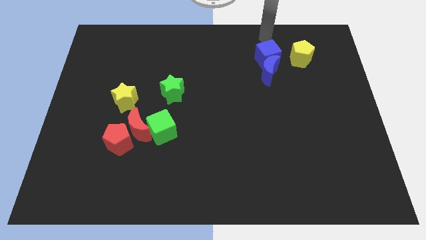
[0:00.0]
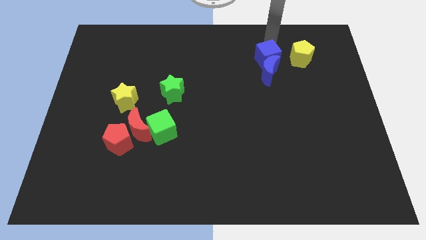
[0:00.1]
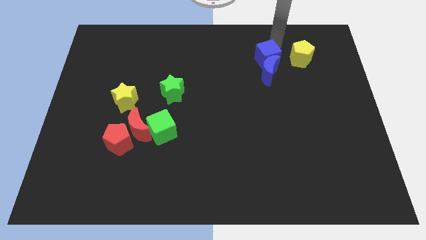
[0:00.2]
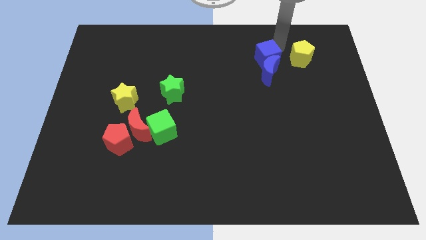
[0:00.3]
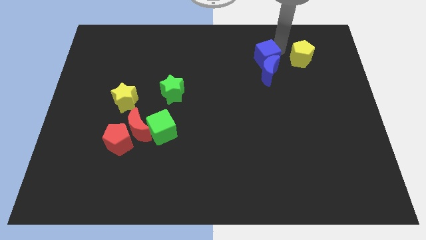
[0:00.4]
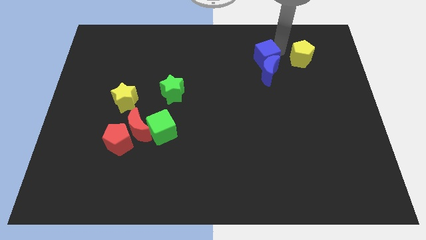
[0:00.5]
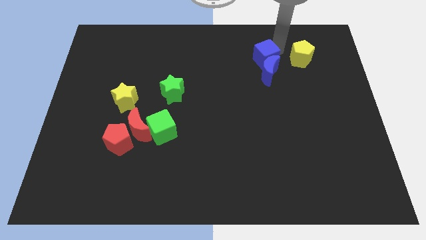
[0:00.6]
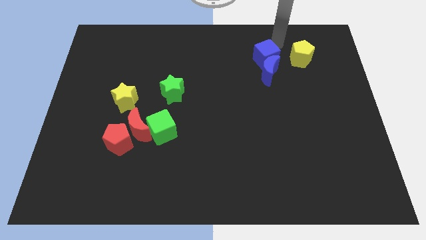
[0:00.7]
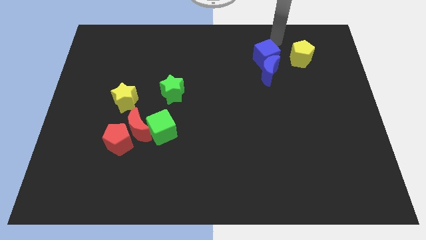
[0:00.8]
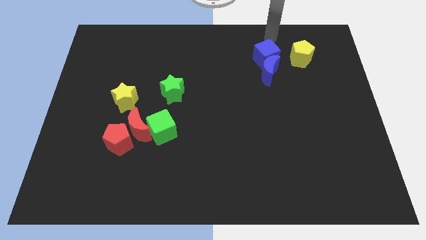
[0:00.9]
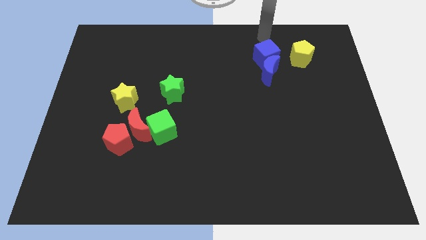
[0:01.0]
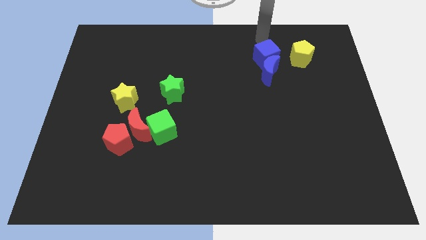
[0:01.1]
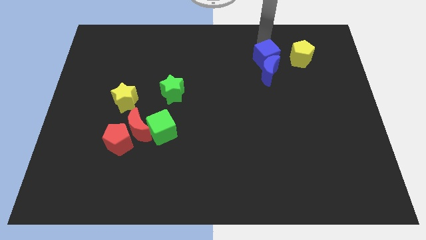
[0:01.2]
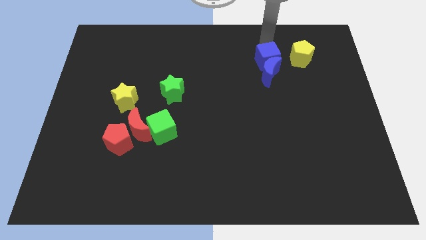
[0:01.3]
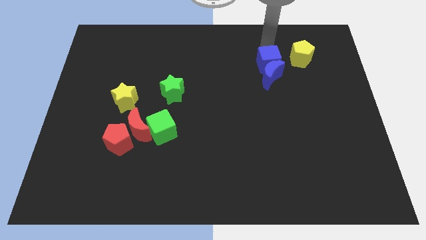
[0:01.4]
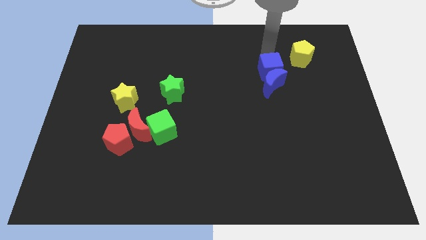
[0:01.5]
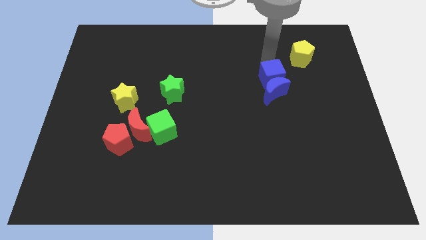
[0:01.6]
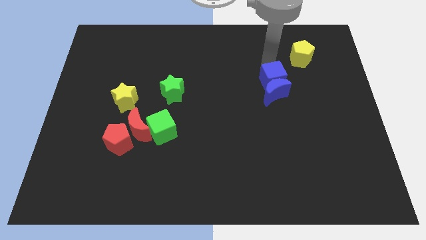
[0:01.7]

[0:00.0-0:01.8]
move the blue blocks away from the yellow pentagon

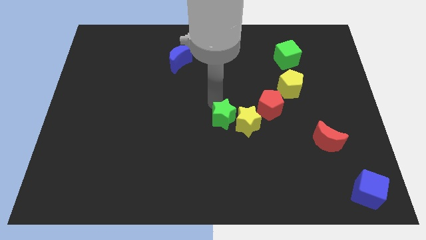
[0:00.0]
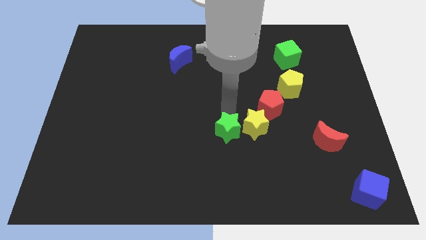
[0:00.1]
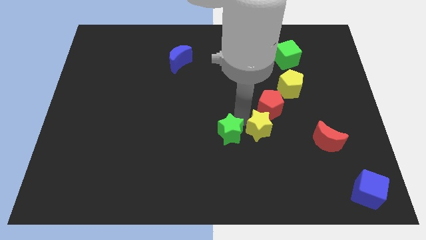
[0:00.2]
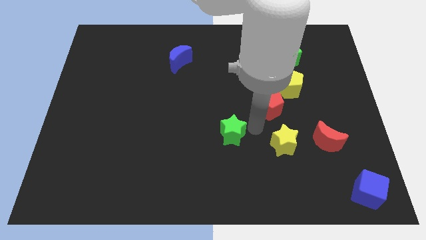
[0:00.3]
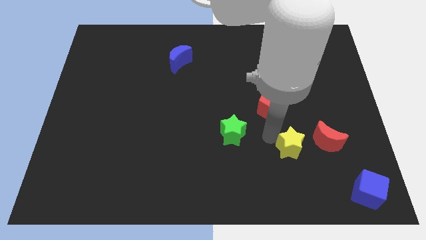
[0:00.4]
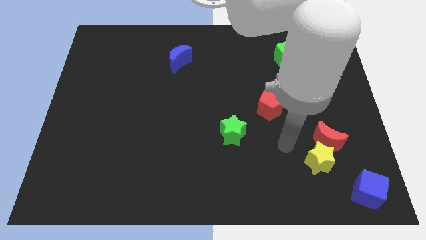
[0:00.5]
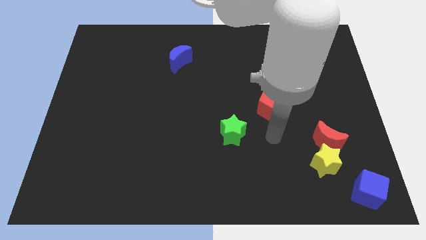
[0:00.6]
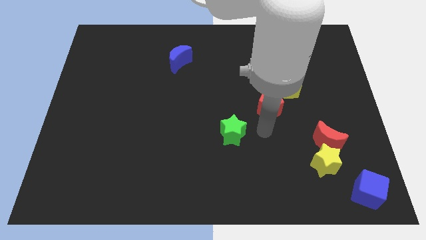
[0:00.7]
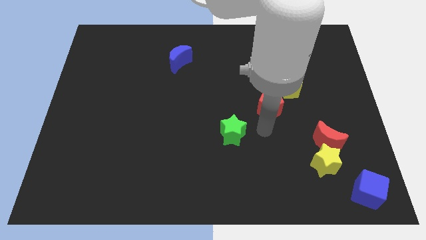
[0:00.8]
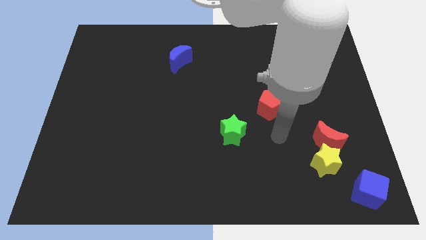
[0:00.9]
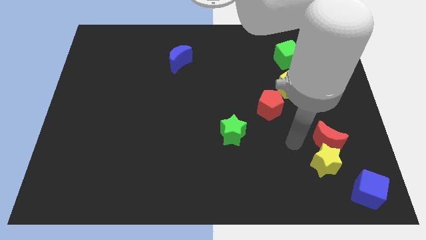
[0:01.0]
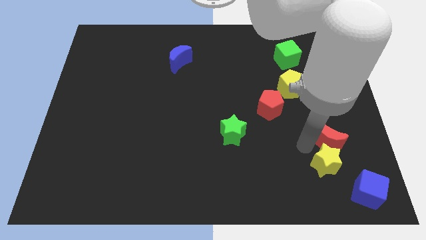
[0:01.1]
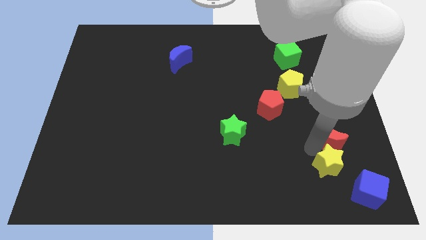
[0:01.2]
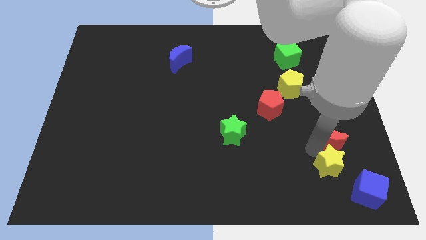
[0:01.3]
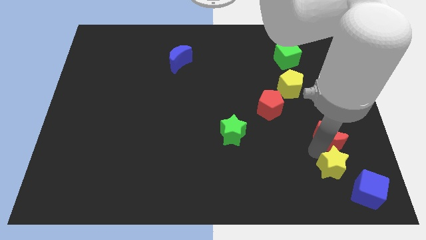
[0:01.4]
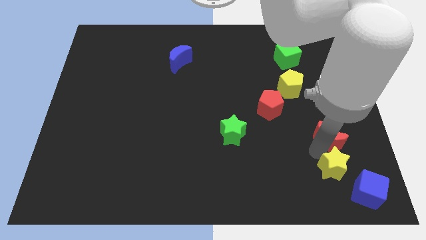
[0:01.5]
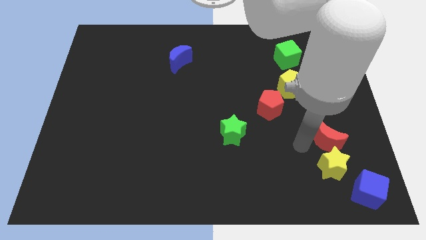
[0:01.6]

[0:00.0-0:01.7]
push the yellow star towards the bottom left corner of the board

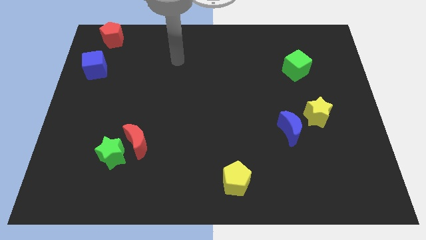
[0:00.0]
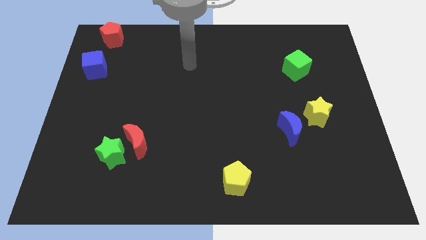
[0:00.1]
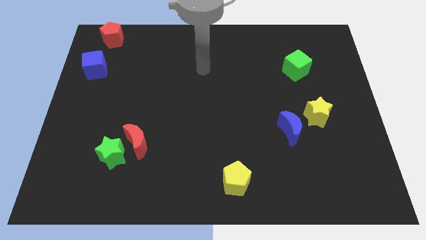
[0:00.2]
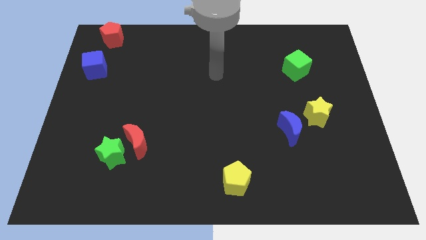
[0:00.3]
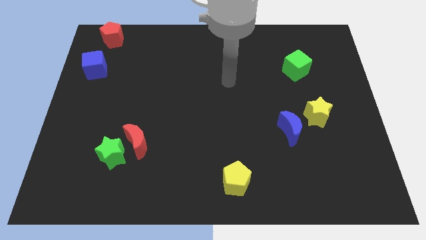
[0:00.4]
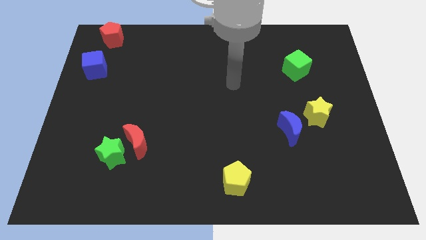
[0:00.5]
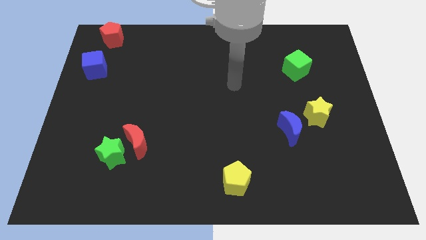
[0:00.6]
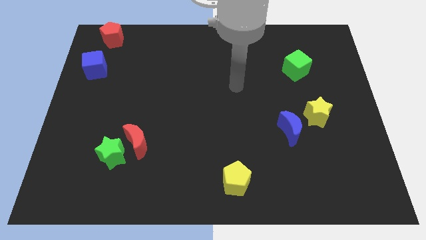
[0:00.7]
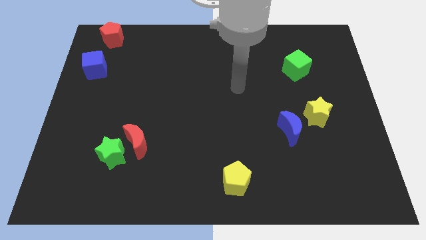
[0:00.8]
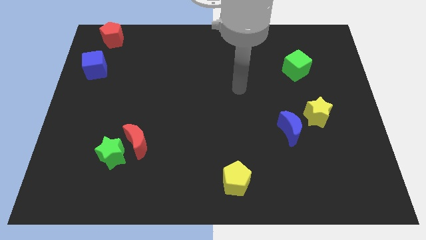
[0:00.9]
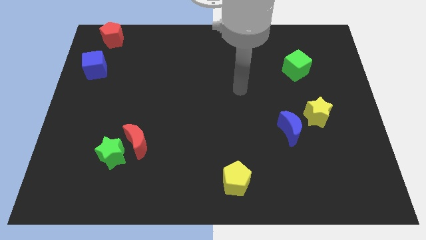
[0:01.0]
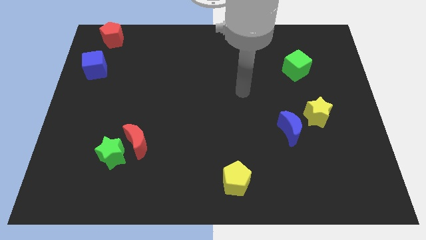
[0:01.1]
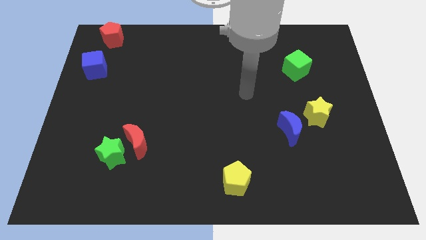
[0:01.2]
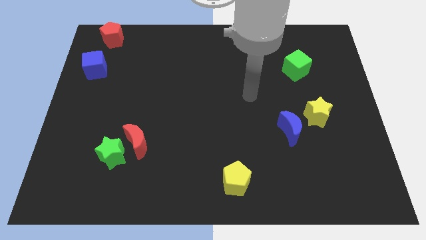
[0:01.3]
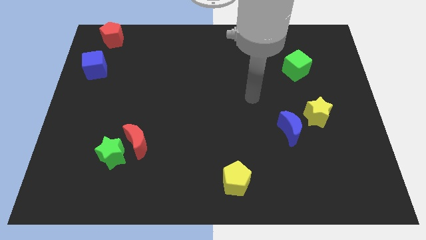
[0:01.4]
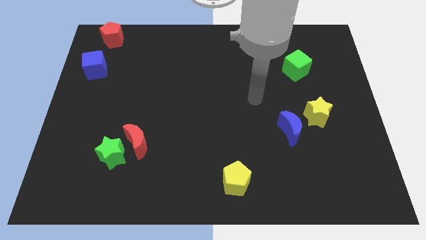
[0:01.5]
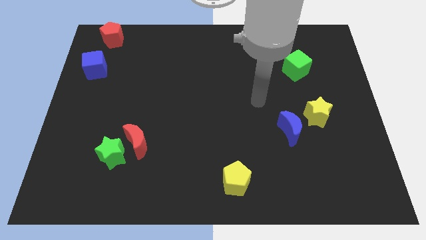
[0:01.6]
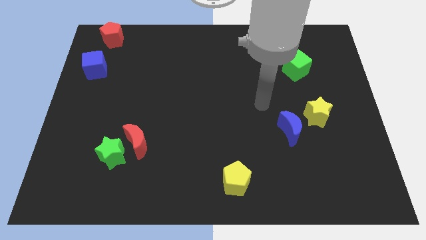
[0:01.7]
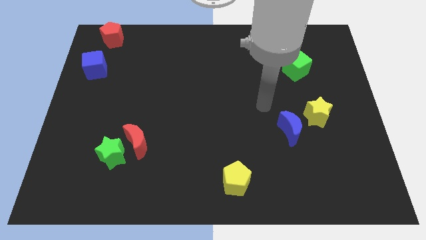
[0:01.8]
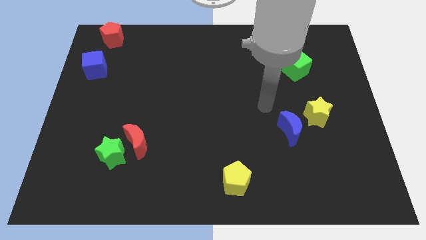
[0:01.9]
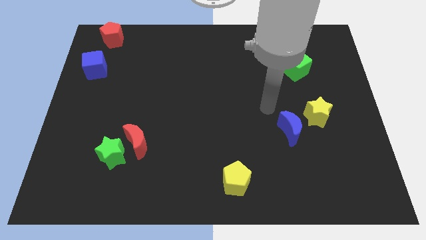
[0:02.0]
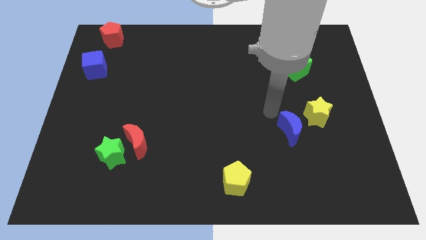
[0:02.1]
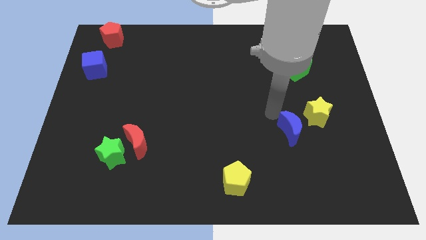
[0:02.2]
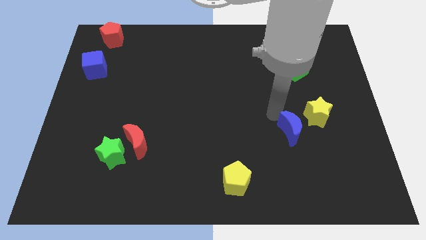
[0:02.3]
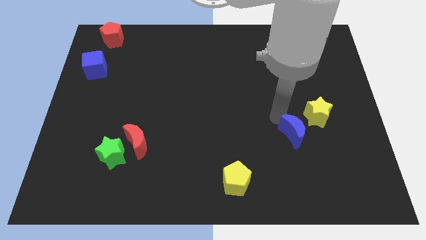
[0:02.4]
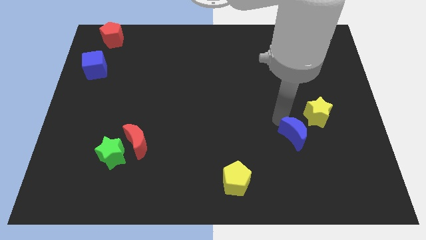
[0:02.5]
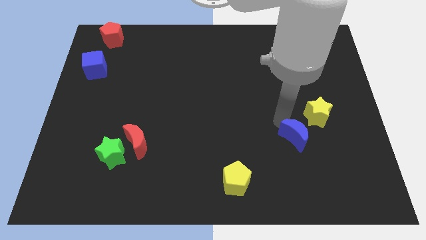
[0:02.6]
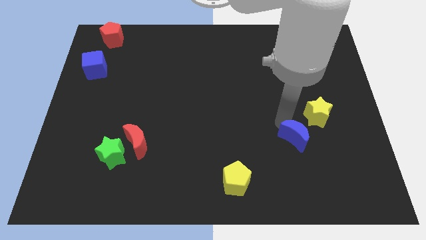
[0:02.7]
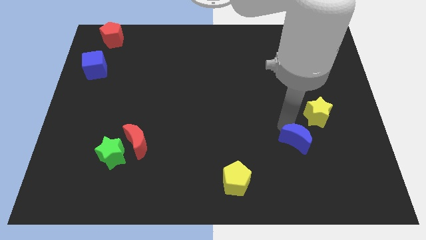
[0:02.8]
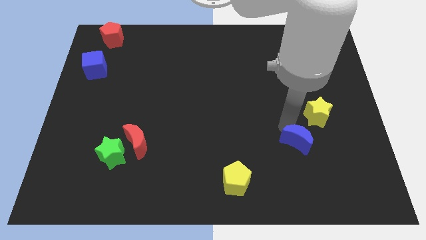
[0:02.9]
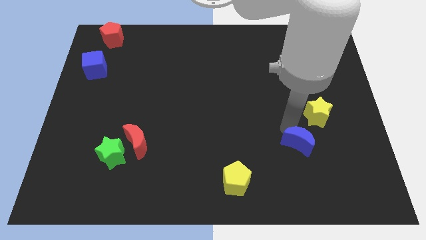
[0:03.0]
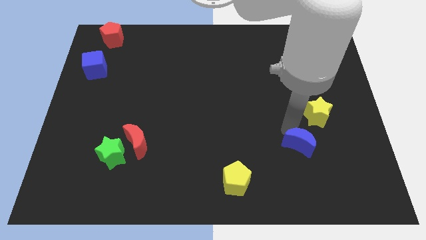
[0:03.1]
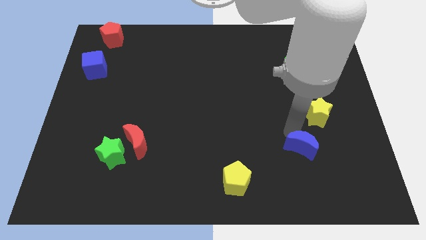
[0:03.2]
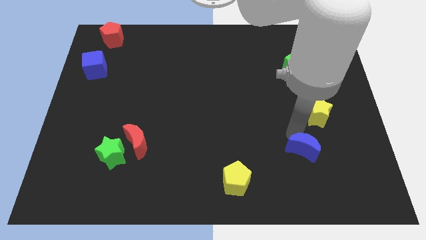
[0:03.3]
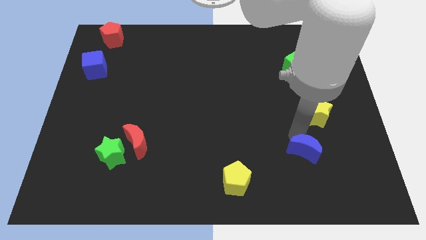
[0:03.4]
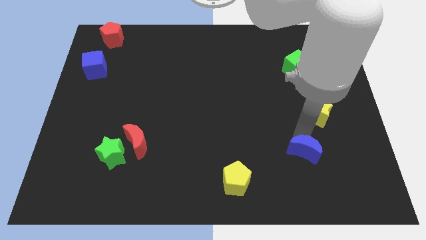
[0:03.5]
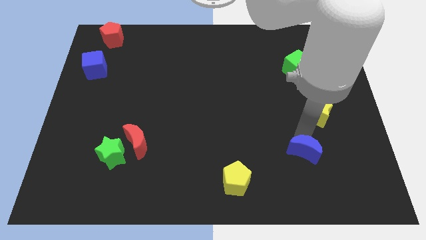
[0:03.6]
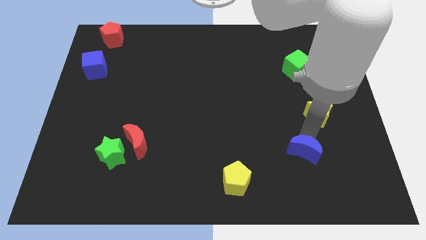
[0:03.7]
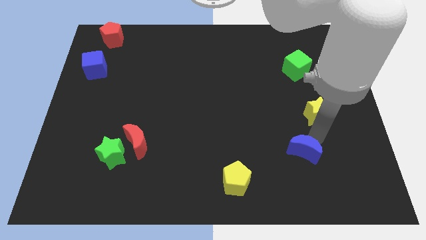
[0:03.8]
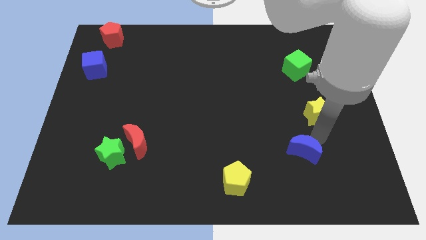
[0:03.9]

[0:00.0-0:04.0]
point your arm between yellow arm and blue moon

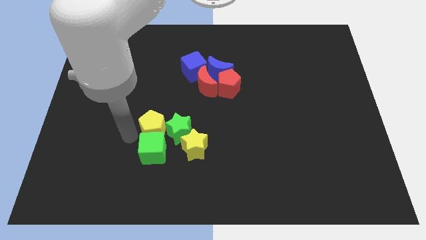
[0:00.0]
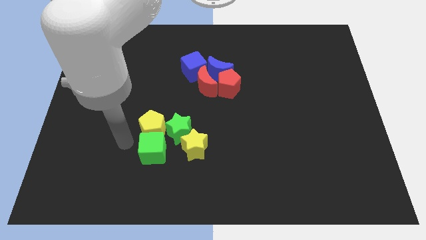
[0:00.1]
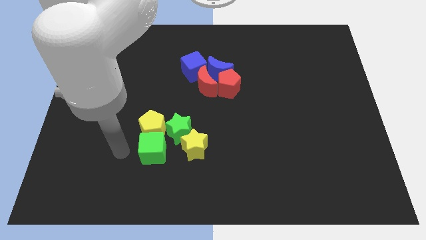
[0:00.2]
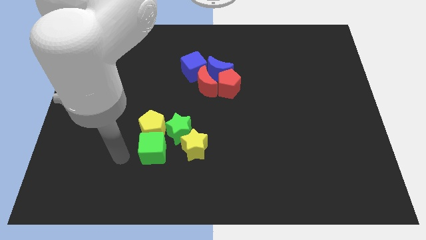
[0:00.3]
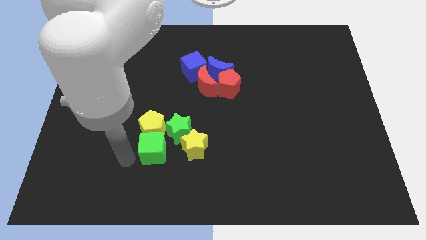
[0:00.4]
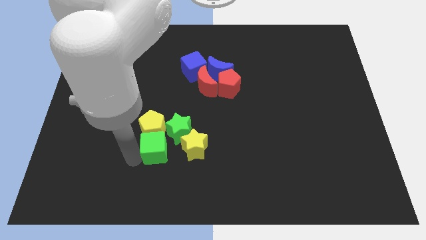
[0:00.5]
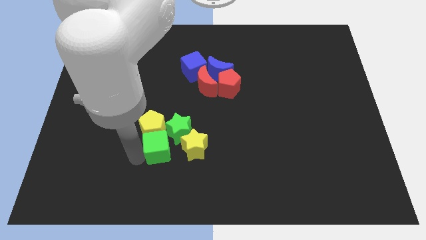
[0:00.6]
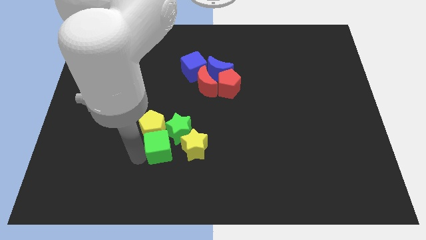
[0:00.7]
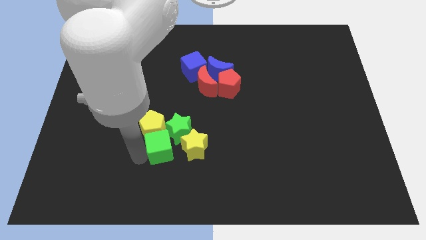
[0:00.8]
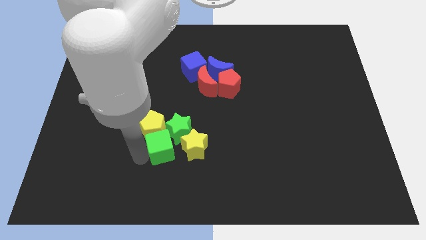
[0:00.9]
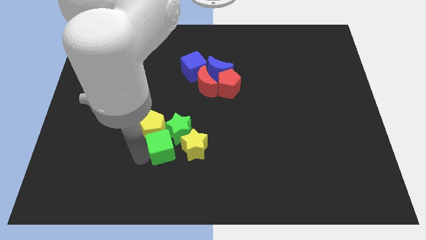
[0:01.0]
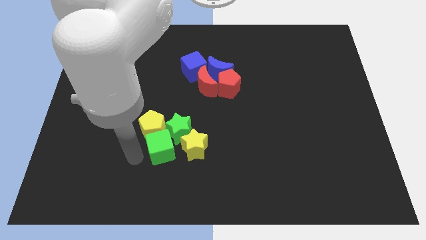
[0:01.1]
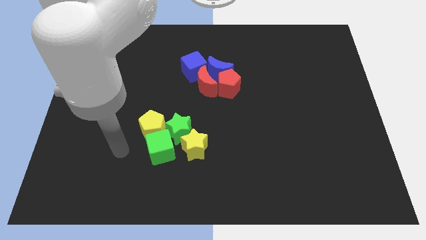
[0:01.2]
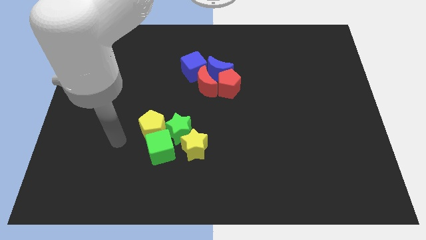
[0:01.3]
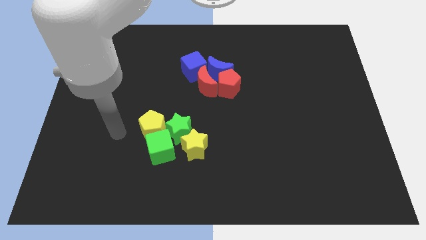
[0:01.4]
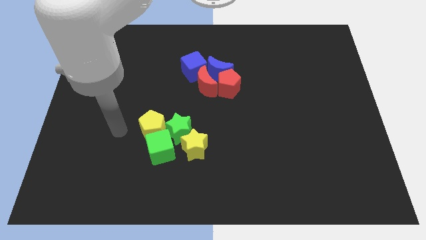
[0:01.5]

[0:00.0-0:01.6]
adjust the green cube to the bottom of the yellow pentagon
